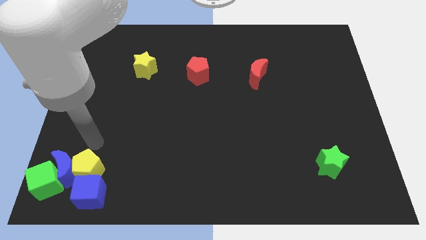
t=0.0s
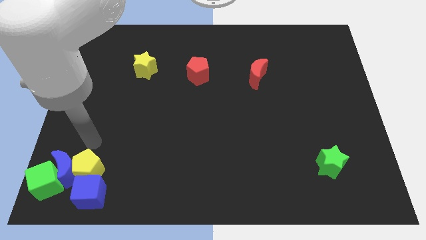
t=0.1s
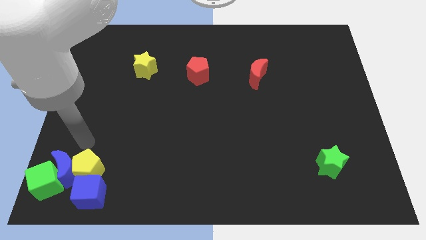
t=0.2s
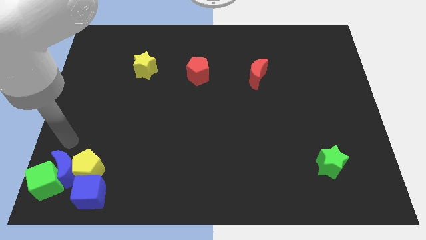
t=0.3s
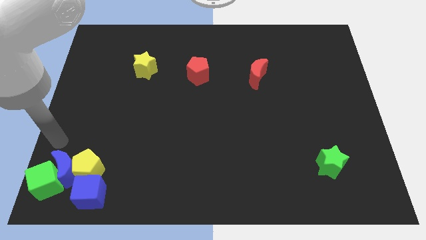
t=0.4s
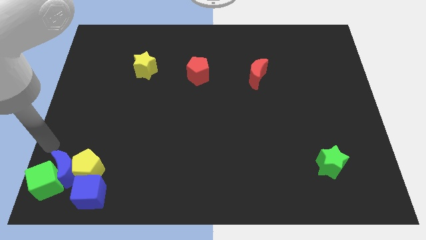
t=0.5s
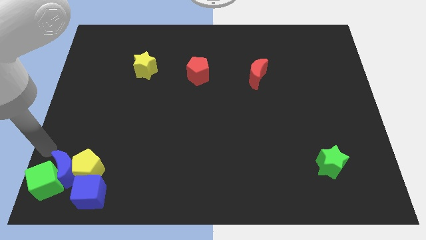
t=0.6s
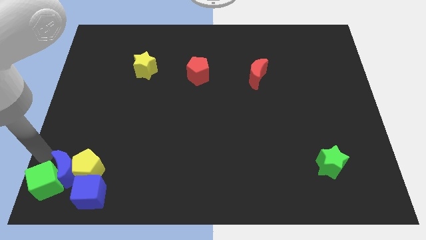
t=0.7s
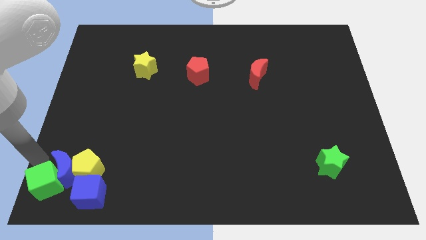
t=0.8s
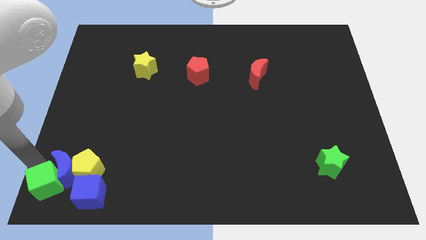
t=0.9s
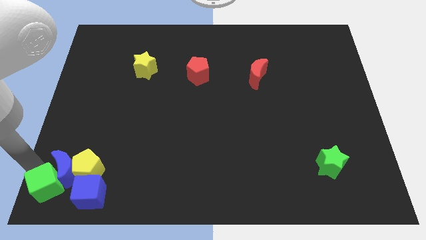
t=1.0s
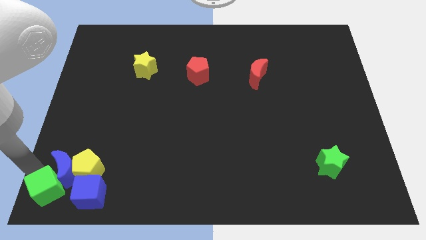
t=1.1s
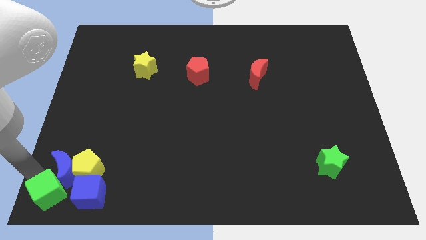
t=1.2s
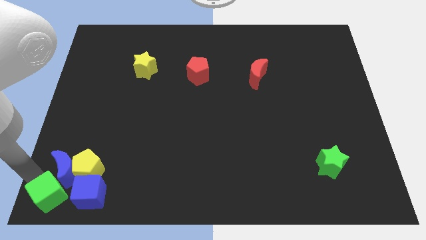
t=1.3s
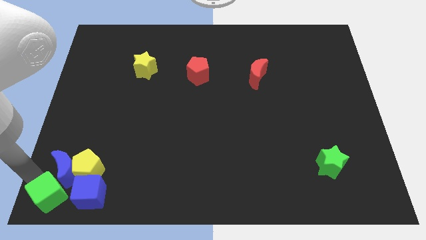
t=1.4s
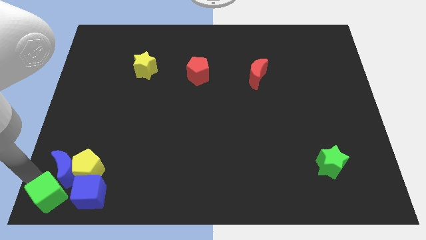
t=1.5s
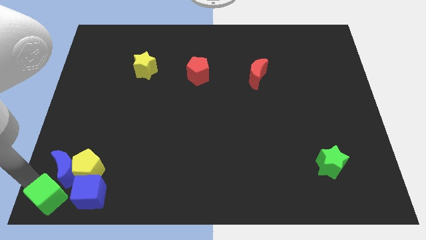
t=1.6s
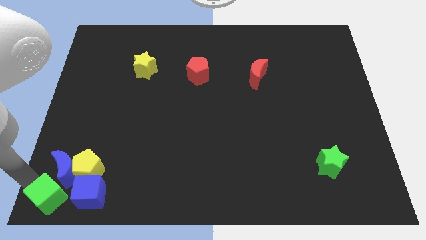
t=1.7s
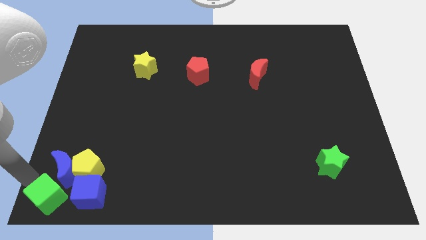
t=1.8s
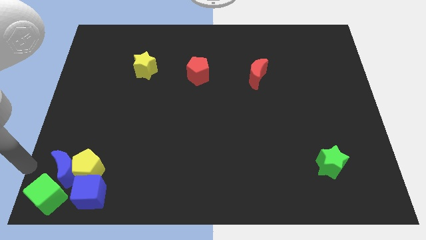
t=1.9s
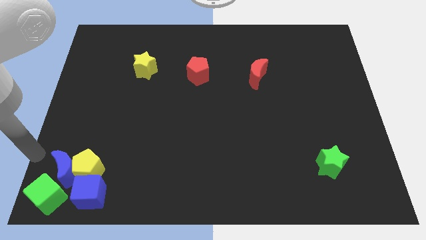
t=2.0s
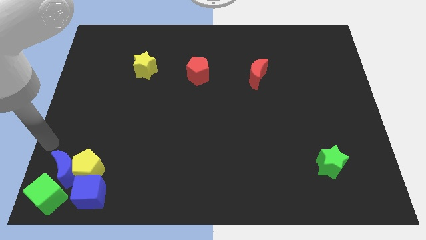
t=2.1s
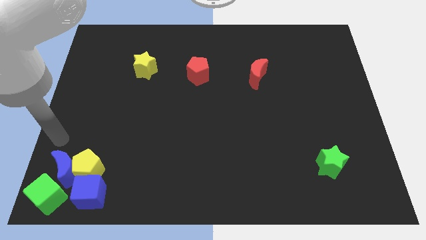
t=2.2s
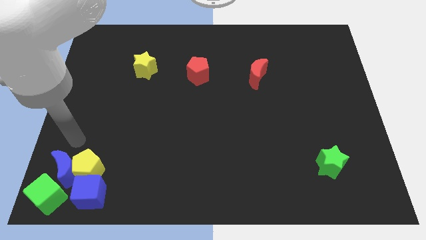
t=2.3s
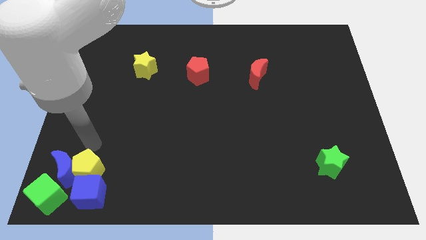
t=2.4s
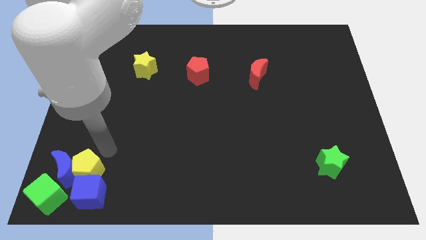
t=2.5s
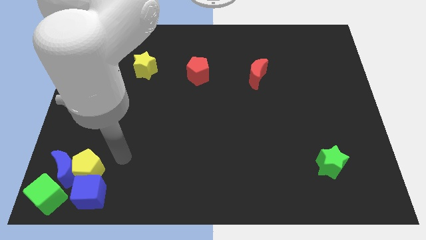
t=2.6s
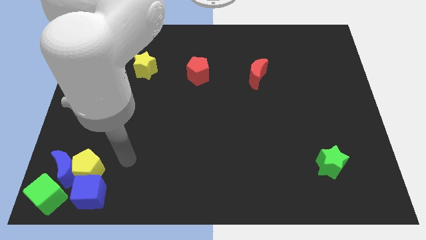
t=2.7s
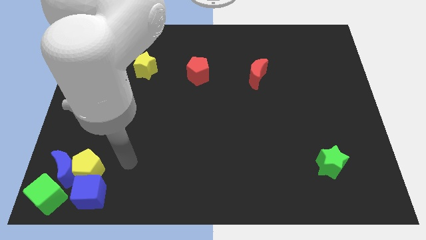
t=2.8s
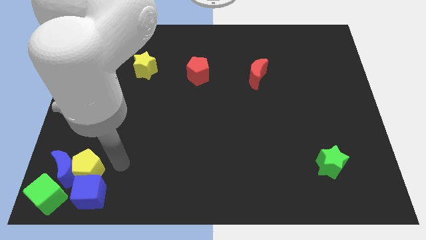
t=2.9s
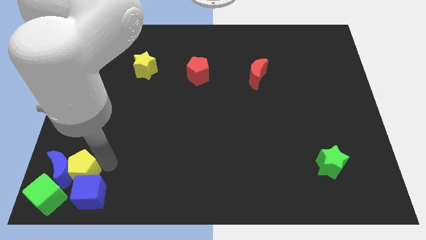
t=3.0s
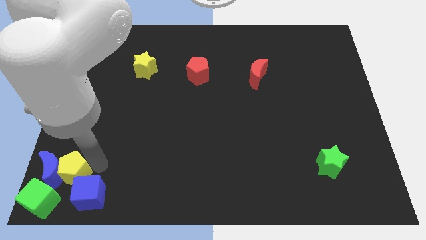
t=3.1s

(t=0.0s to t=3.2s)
adjust the green cube at the bottom left corner

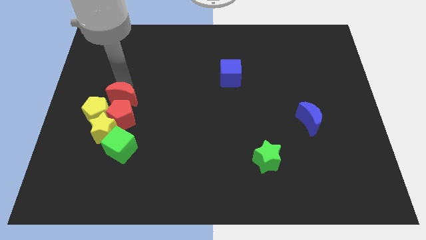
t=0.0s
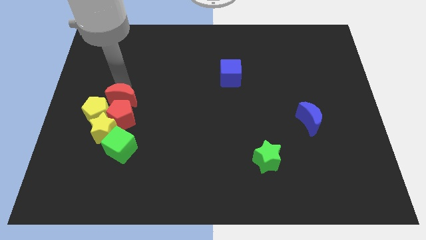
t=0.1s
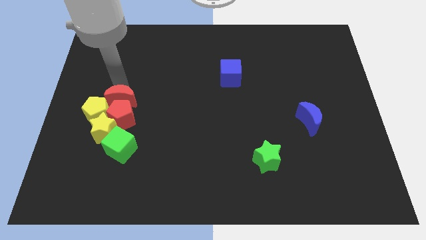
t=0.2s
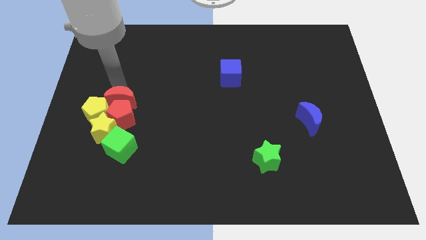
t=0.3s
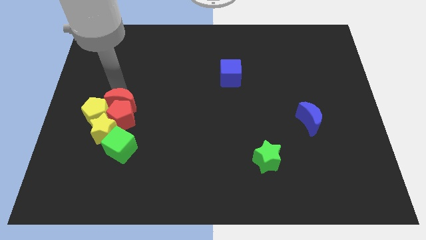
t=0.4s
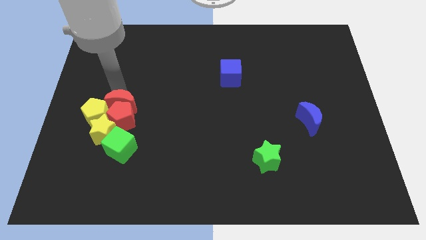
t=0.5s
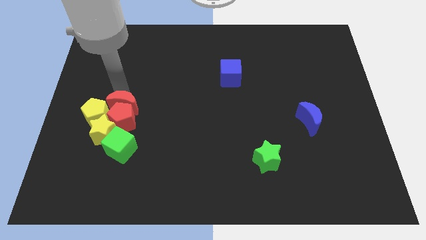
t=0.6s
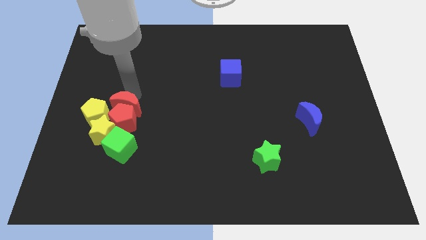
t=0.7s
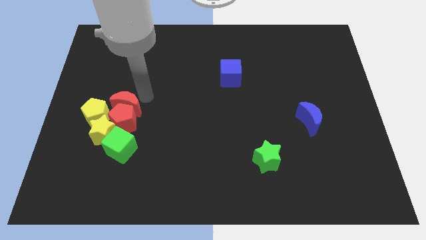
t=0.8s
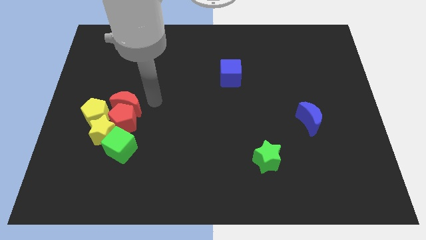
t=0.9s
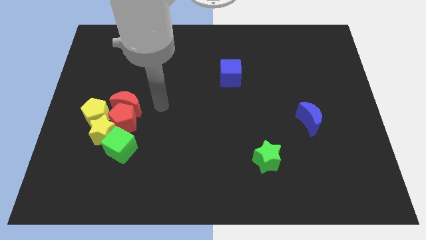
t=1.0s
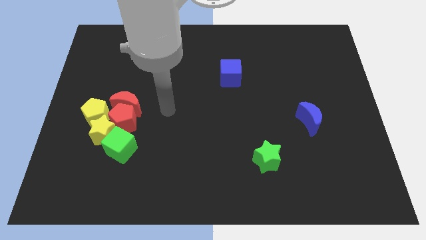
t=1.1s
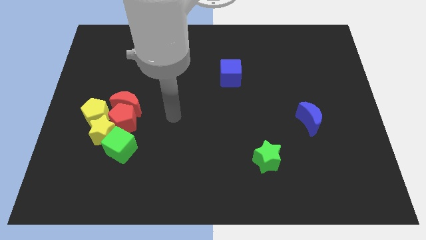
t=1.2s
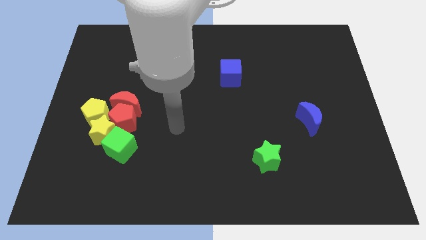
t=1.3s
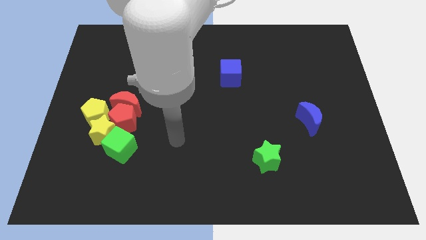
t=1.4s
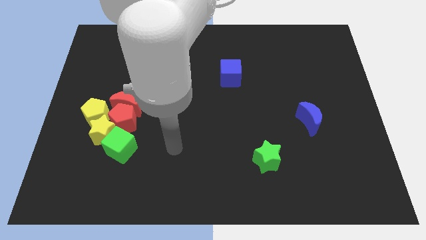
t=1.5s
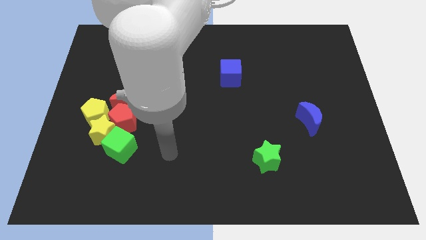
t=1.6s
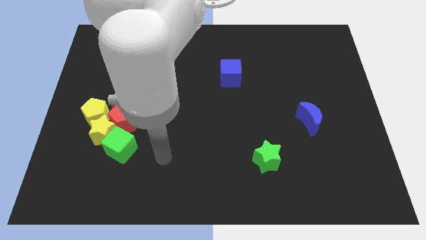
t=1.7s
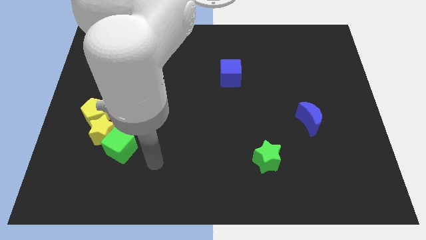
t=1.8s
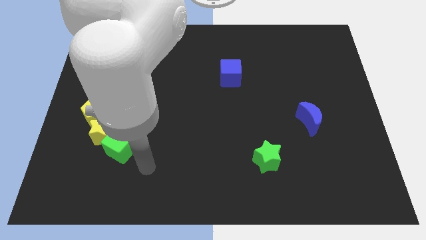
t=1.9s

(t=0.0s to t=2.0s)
move the red crescent above the red crescent

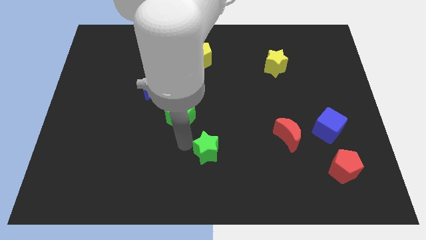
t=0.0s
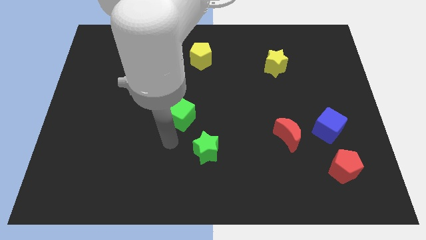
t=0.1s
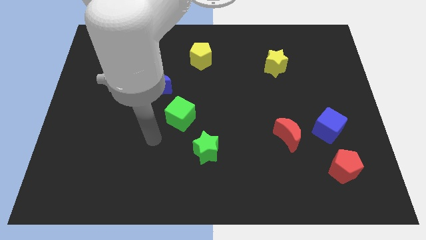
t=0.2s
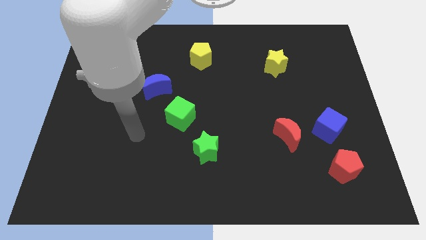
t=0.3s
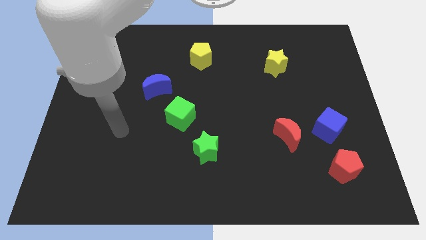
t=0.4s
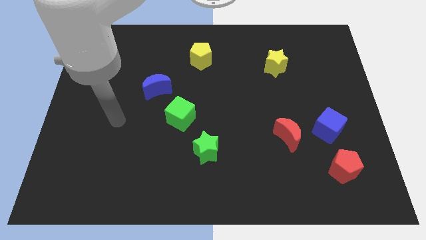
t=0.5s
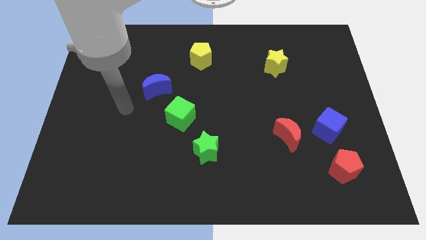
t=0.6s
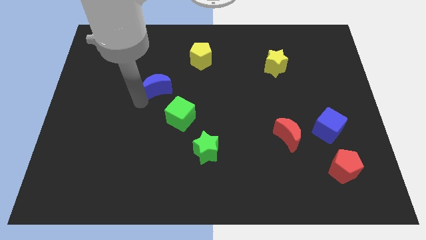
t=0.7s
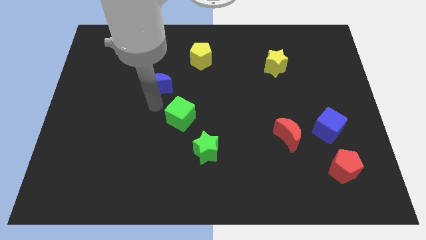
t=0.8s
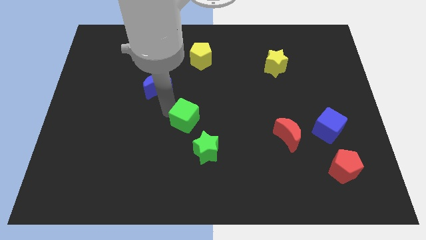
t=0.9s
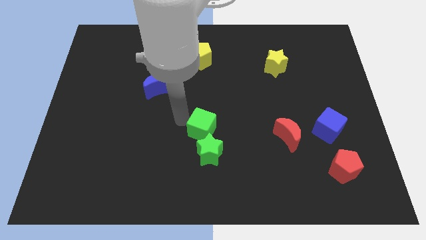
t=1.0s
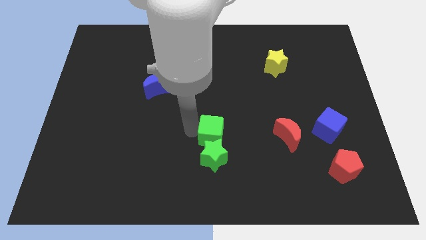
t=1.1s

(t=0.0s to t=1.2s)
slide the green cube to the top of the green star

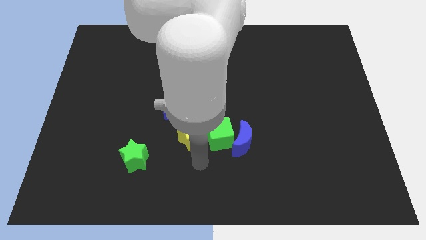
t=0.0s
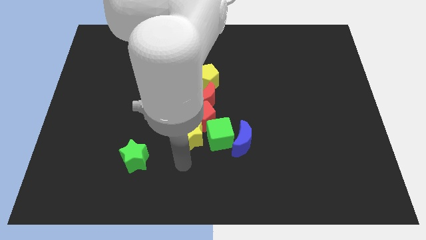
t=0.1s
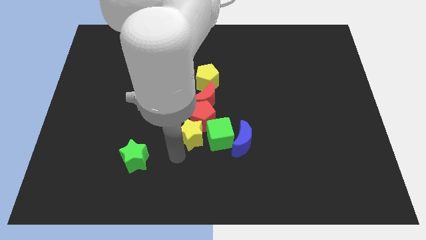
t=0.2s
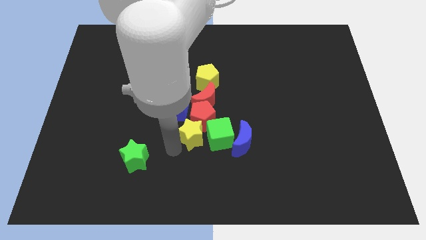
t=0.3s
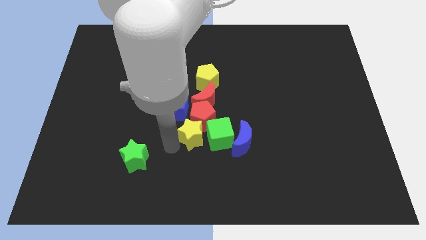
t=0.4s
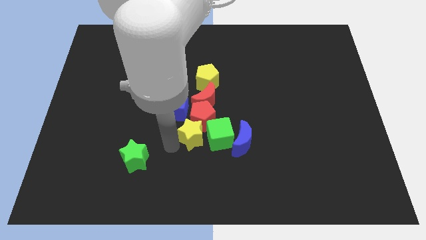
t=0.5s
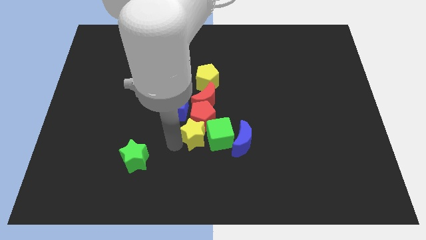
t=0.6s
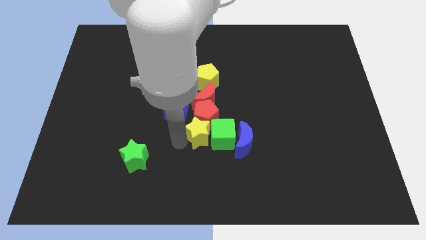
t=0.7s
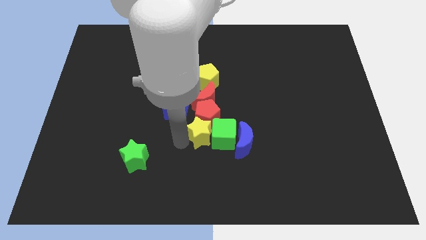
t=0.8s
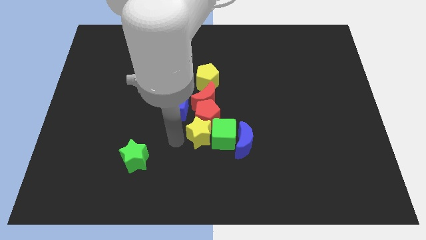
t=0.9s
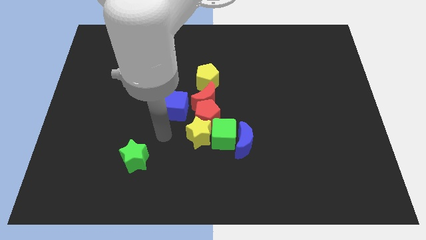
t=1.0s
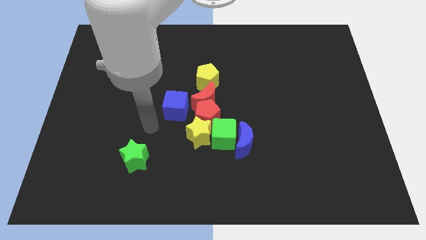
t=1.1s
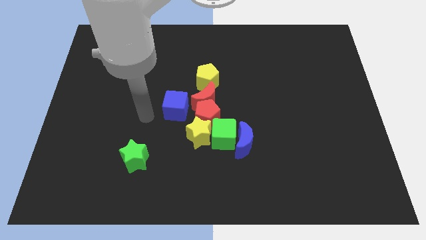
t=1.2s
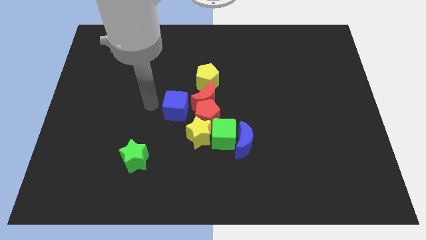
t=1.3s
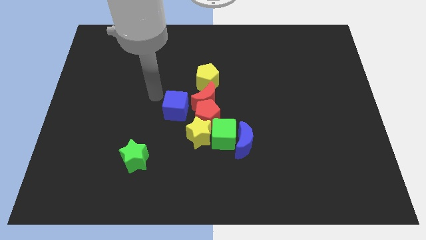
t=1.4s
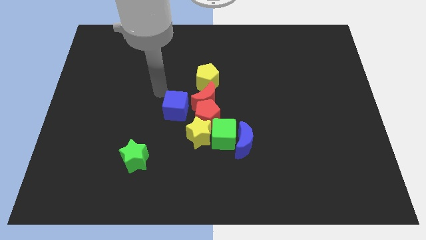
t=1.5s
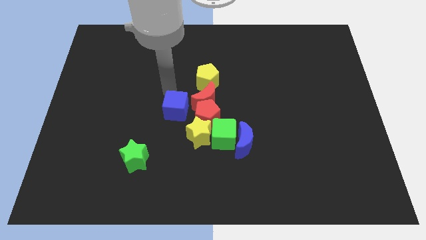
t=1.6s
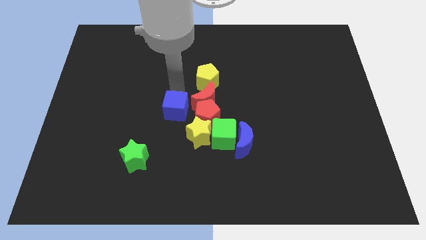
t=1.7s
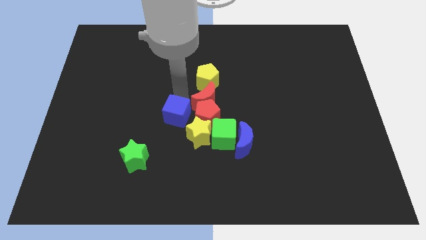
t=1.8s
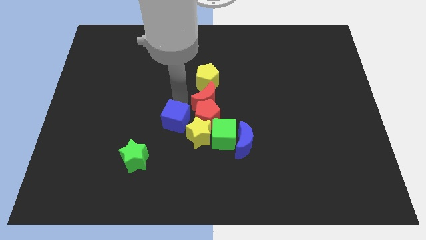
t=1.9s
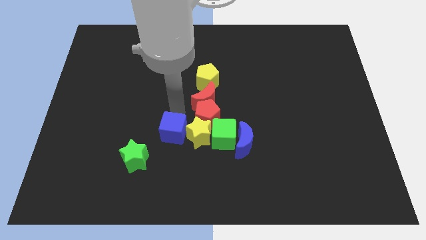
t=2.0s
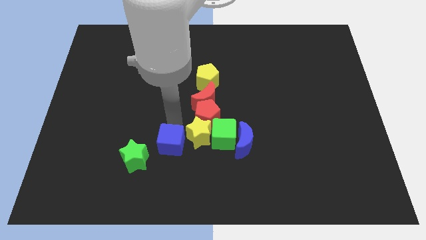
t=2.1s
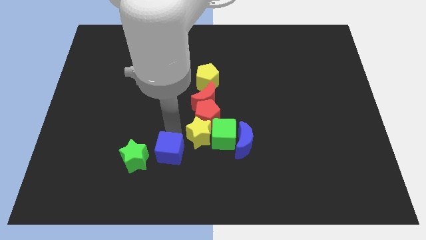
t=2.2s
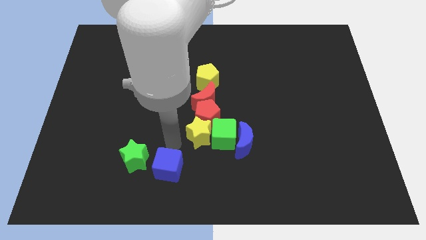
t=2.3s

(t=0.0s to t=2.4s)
place the blue cube right to the green star

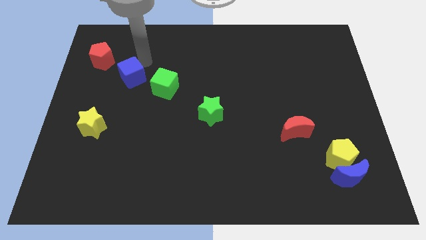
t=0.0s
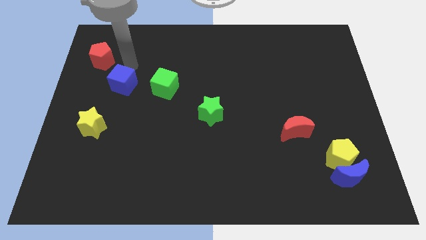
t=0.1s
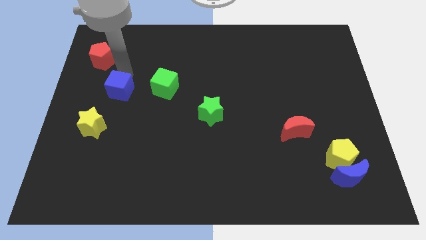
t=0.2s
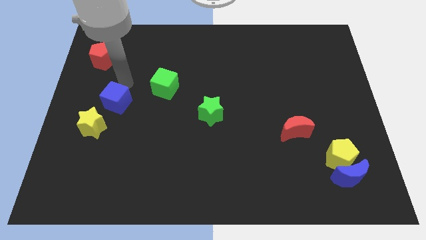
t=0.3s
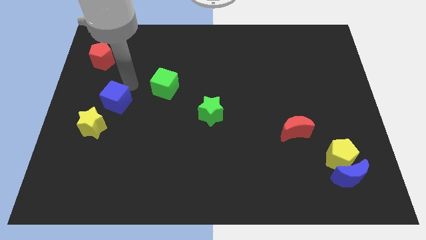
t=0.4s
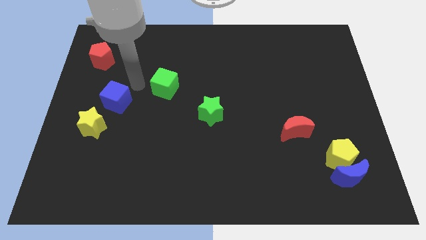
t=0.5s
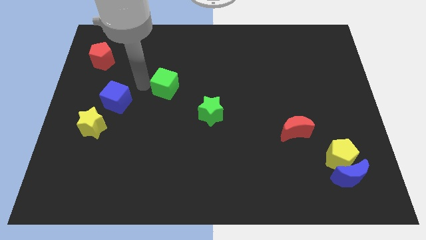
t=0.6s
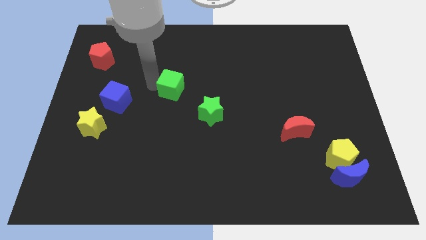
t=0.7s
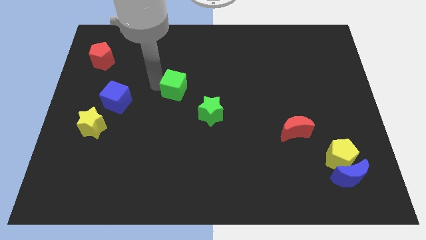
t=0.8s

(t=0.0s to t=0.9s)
push the blue cube diagonally to the top right of the yellow star
